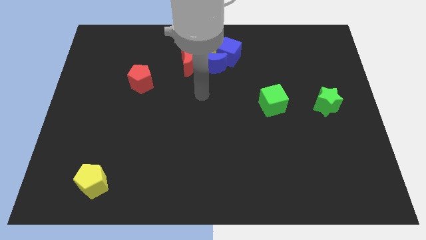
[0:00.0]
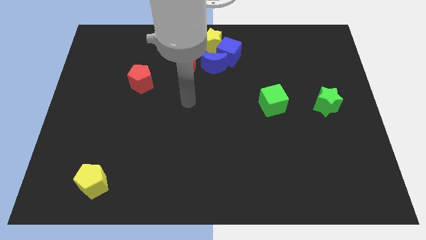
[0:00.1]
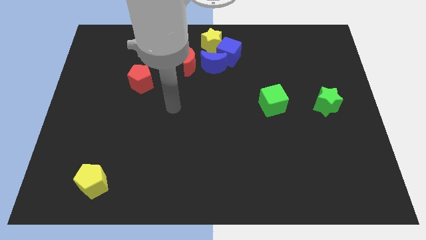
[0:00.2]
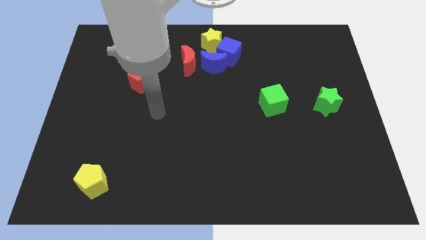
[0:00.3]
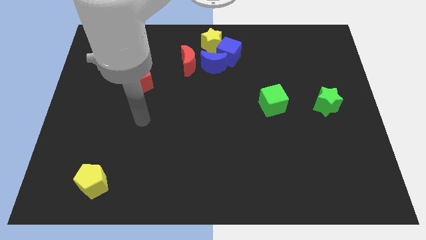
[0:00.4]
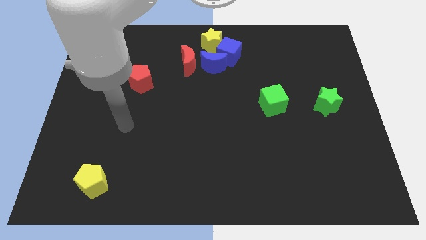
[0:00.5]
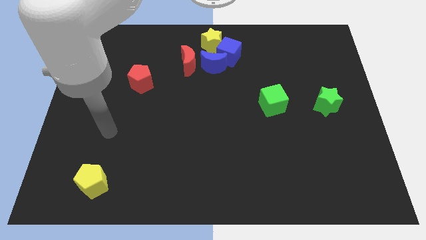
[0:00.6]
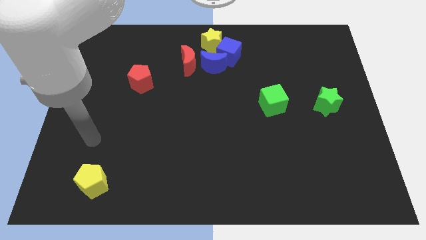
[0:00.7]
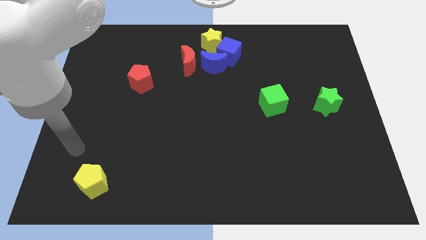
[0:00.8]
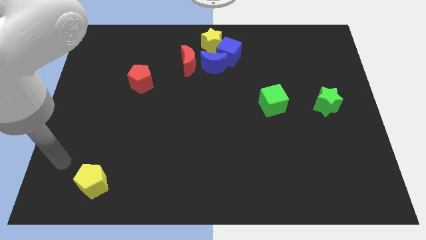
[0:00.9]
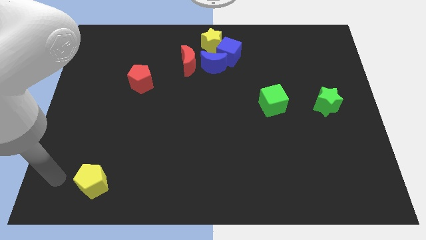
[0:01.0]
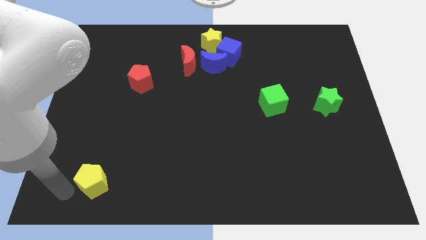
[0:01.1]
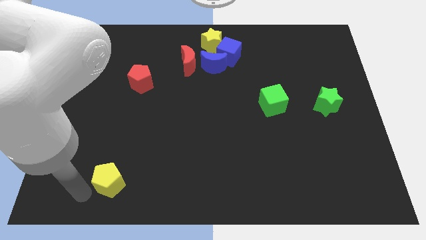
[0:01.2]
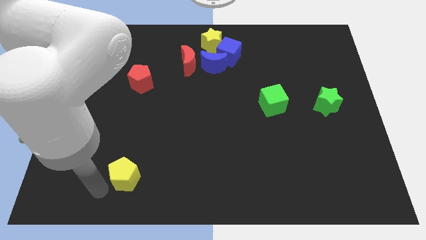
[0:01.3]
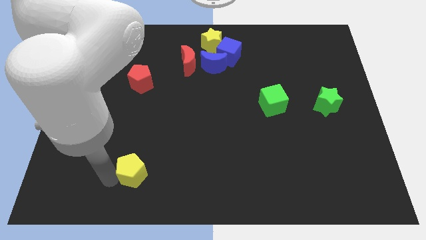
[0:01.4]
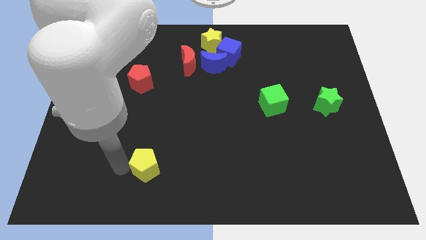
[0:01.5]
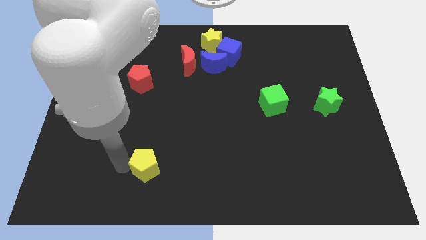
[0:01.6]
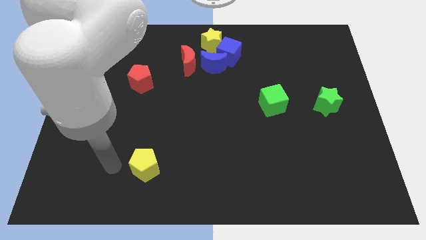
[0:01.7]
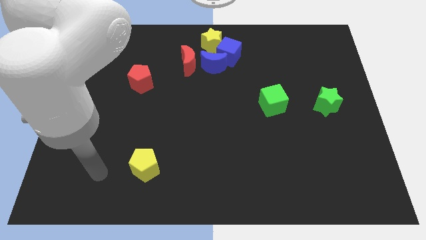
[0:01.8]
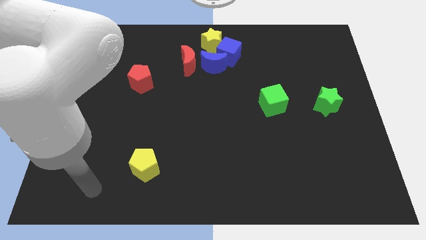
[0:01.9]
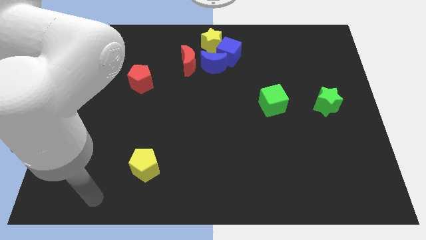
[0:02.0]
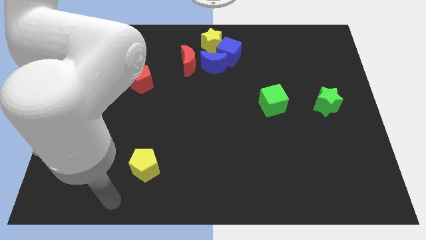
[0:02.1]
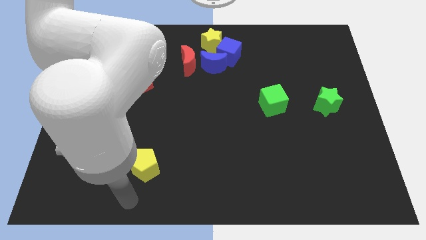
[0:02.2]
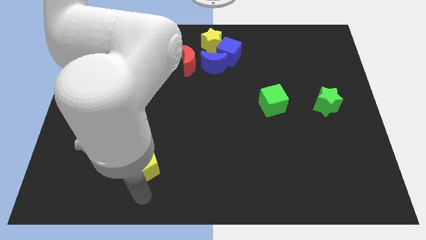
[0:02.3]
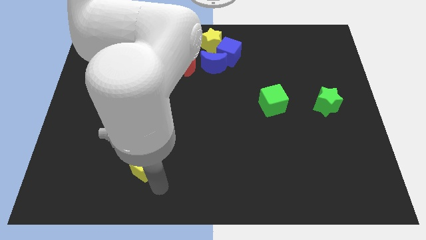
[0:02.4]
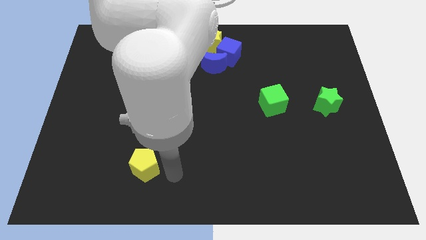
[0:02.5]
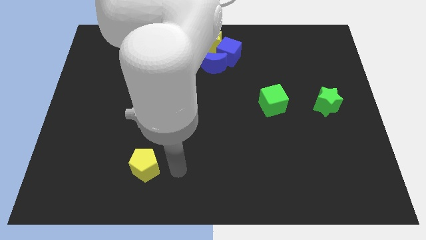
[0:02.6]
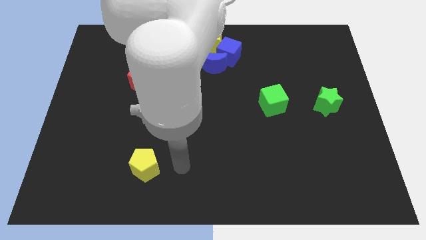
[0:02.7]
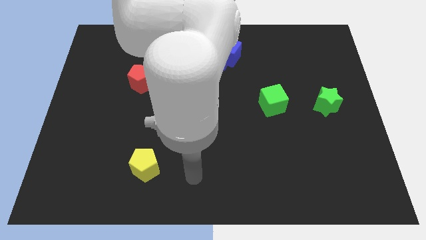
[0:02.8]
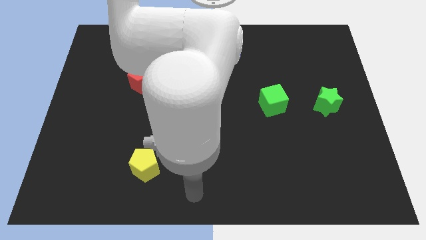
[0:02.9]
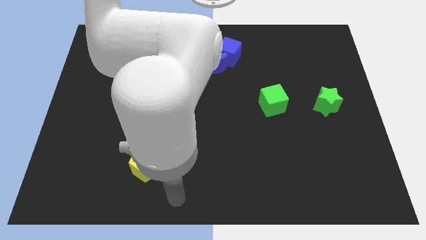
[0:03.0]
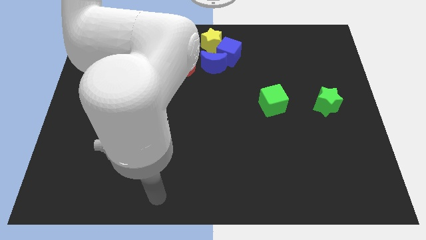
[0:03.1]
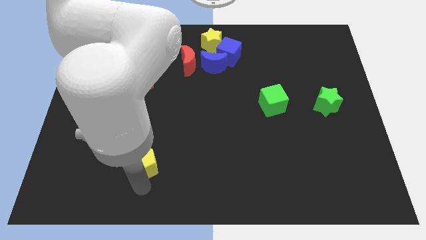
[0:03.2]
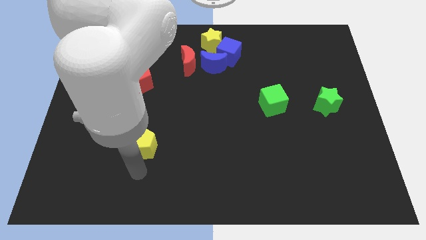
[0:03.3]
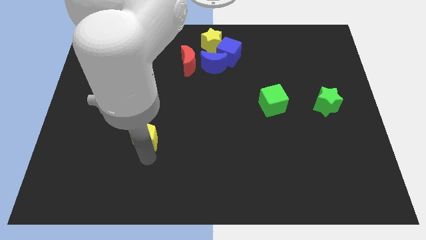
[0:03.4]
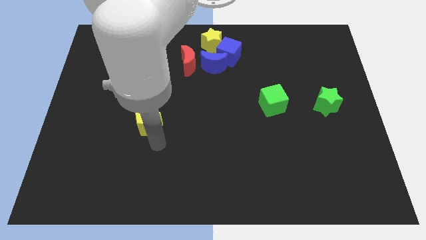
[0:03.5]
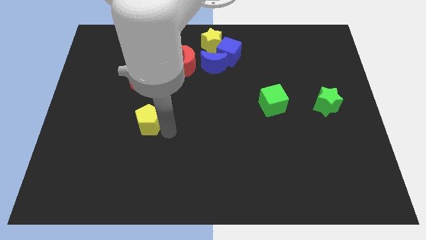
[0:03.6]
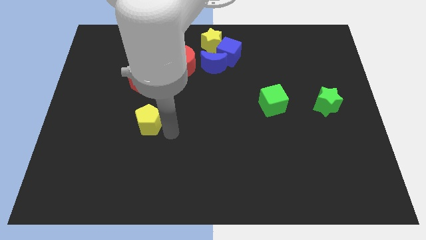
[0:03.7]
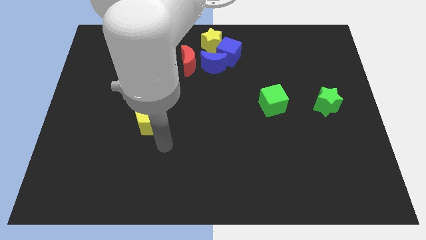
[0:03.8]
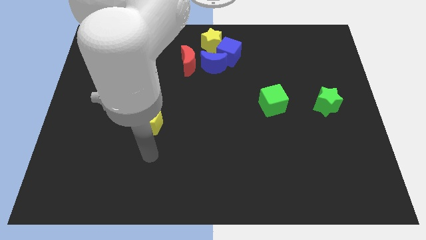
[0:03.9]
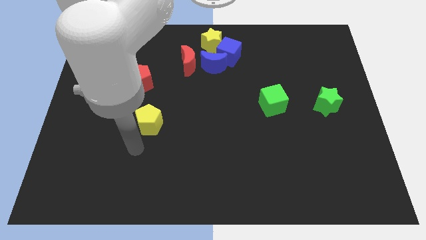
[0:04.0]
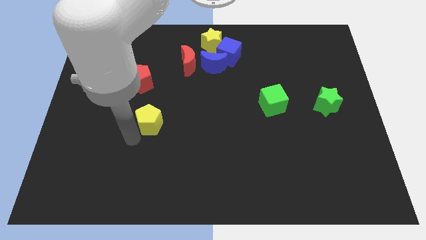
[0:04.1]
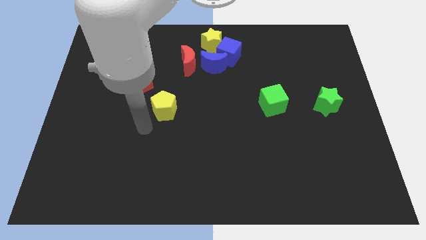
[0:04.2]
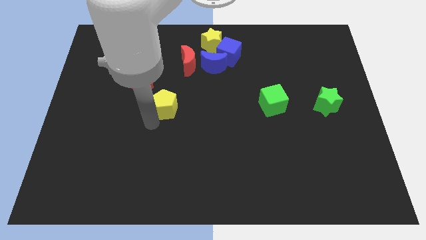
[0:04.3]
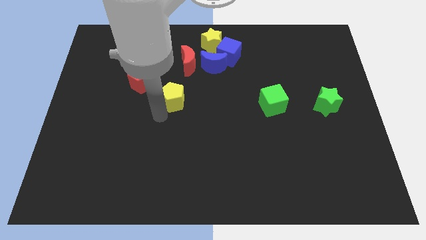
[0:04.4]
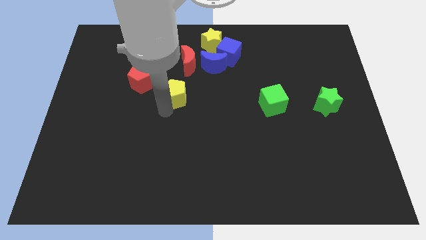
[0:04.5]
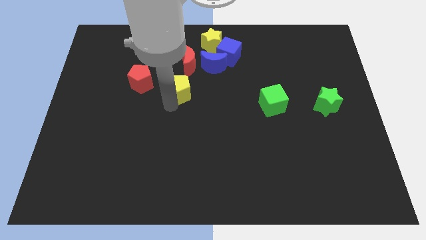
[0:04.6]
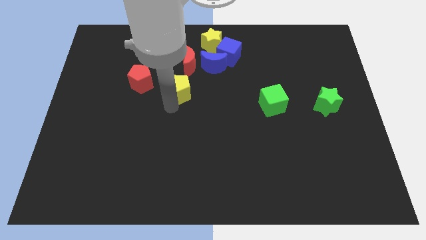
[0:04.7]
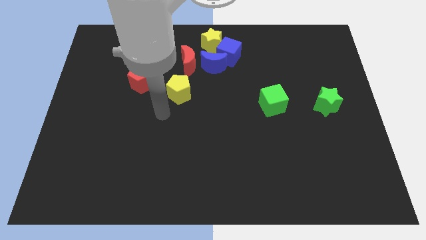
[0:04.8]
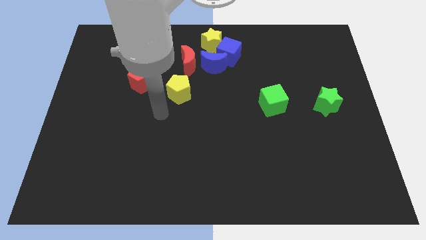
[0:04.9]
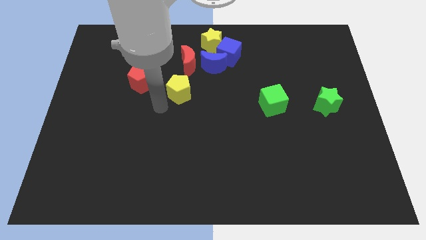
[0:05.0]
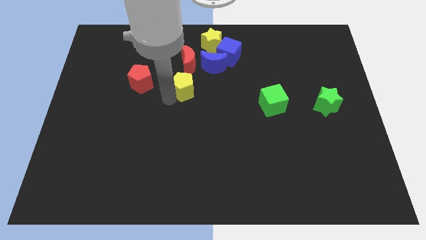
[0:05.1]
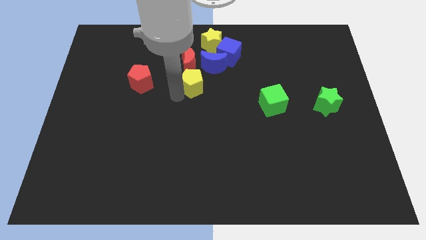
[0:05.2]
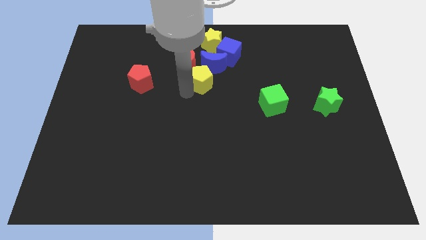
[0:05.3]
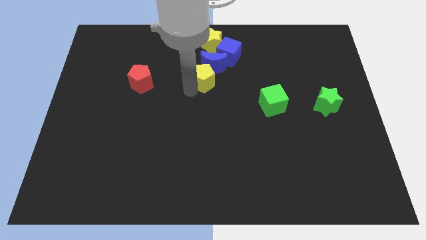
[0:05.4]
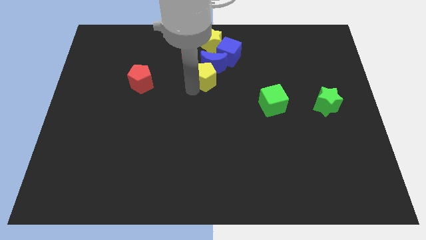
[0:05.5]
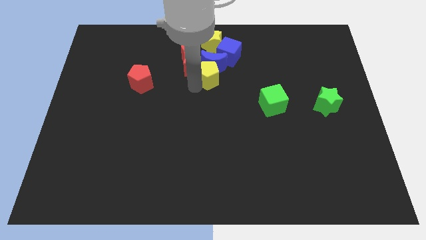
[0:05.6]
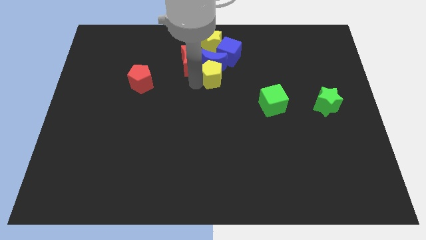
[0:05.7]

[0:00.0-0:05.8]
slide the yellow pentagon into the bottom side of the blue crescent

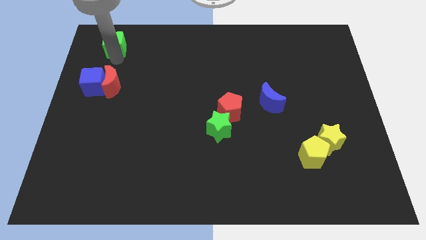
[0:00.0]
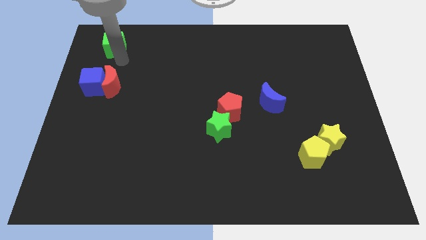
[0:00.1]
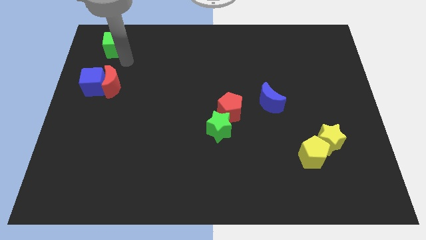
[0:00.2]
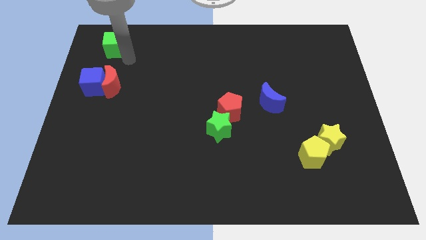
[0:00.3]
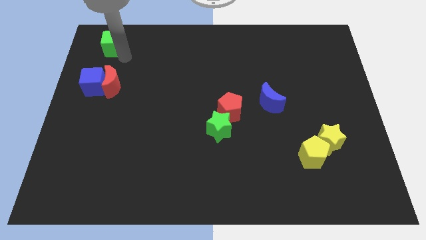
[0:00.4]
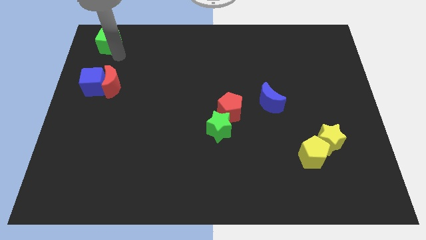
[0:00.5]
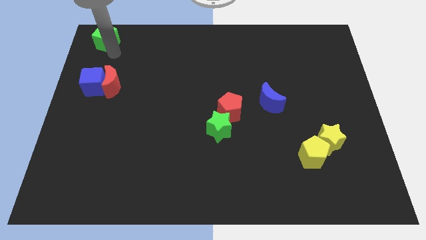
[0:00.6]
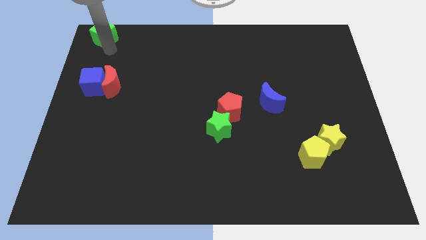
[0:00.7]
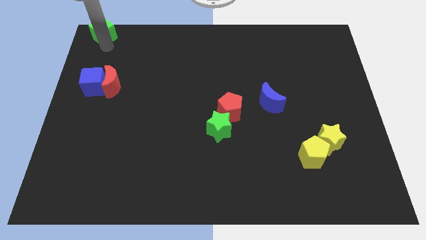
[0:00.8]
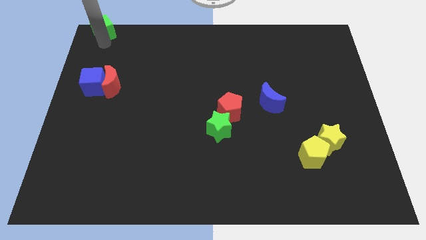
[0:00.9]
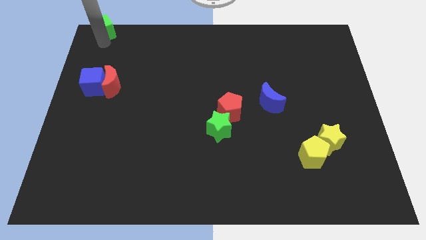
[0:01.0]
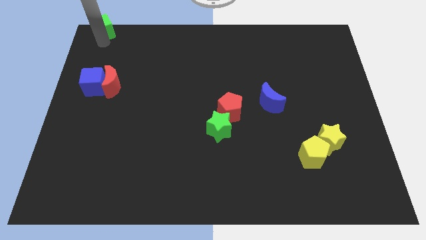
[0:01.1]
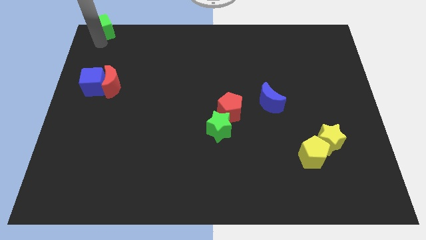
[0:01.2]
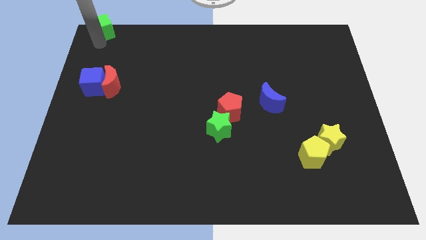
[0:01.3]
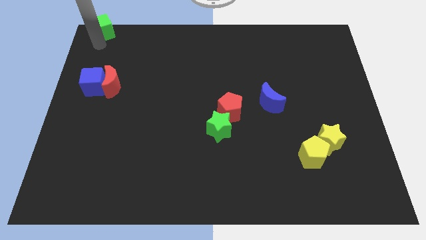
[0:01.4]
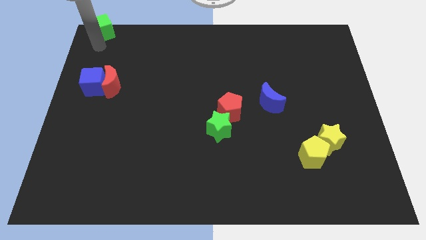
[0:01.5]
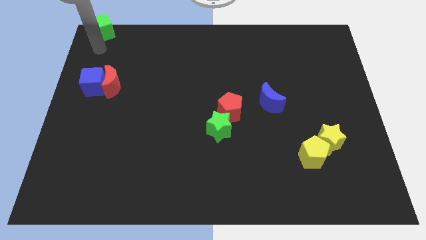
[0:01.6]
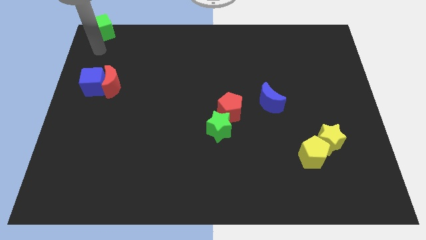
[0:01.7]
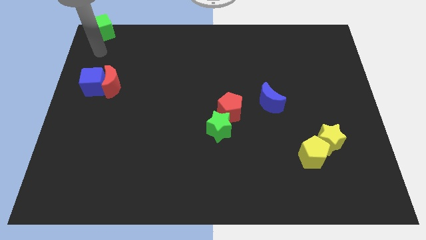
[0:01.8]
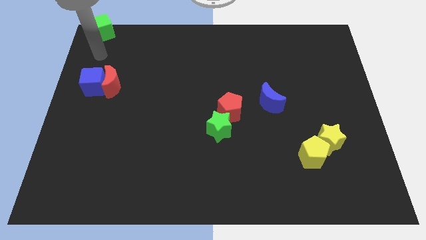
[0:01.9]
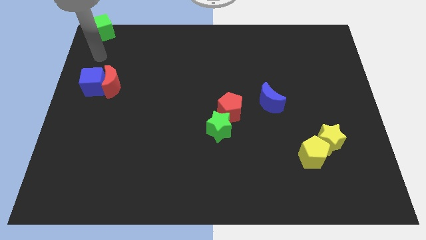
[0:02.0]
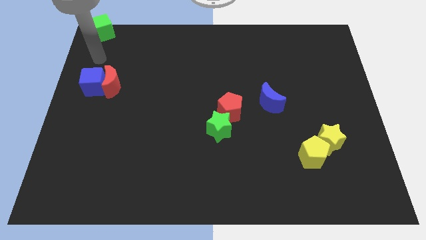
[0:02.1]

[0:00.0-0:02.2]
push the green cube to the top left corner

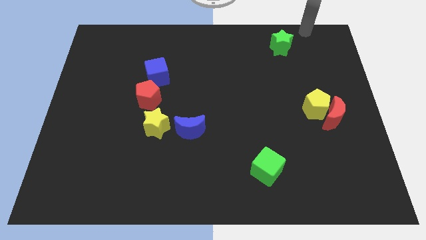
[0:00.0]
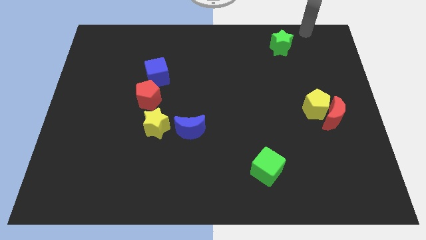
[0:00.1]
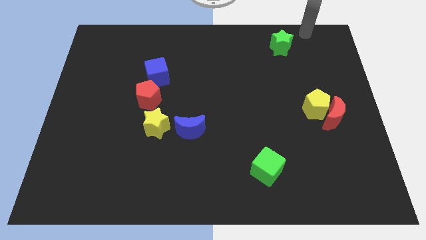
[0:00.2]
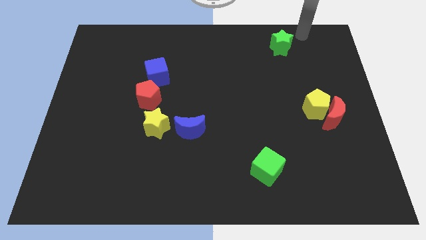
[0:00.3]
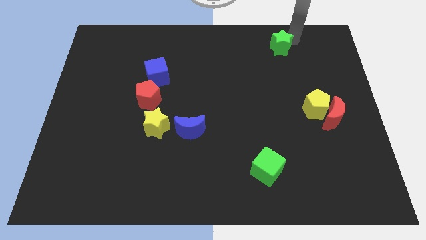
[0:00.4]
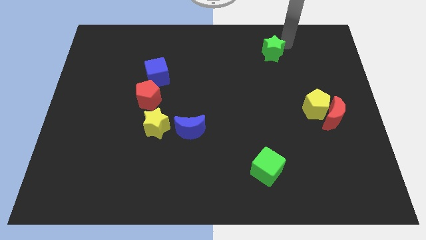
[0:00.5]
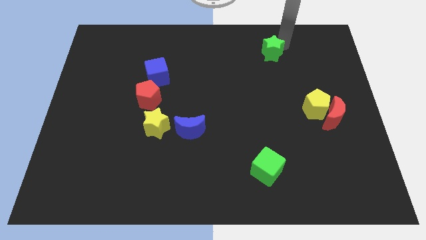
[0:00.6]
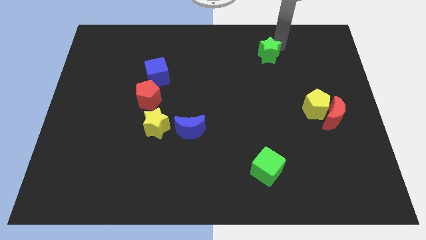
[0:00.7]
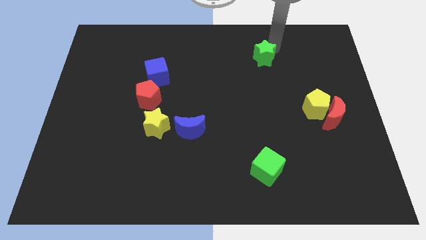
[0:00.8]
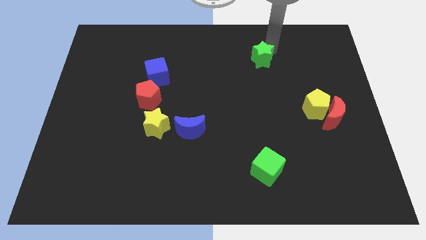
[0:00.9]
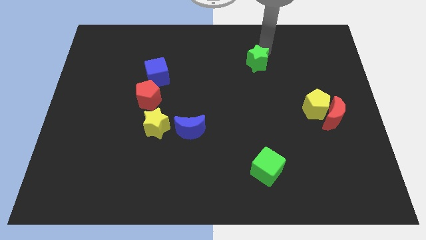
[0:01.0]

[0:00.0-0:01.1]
move the green star vertically above the green cube
